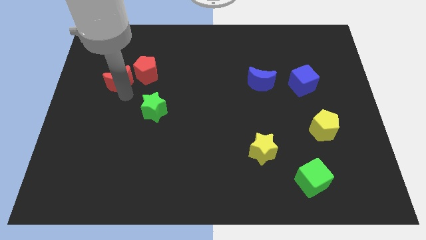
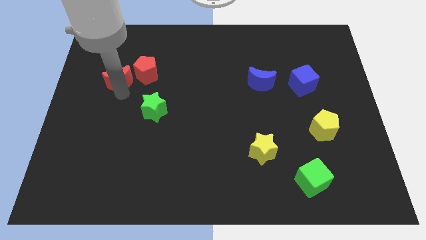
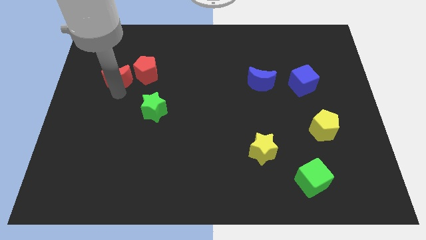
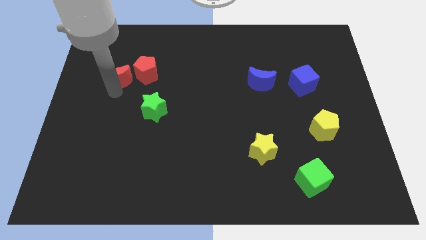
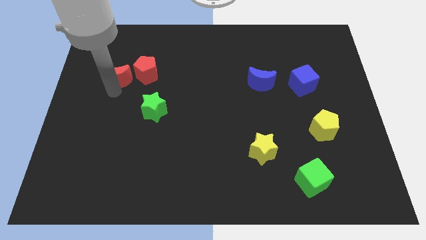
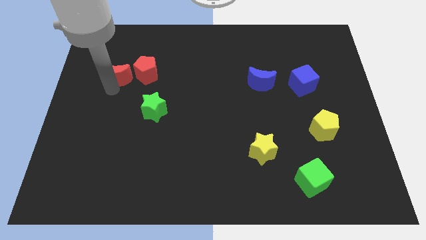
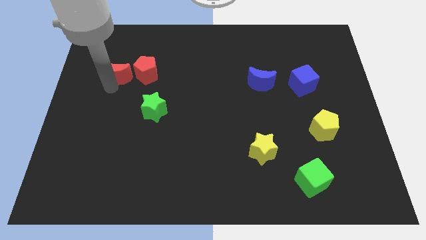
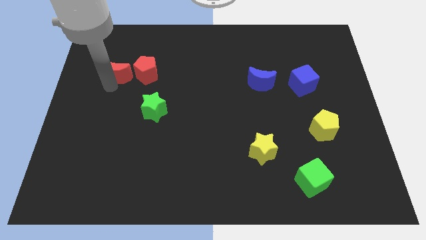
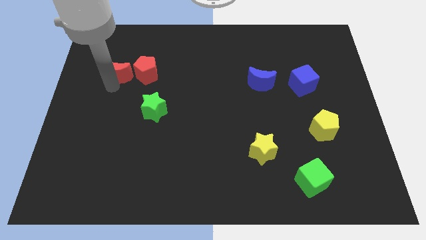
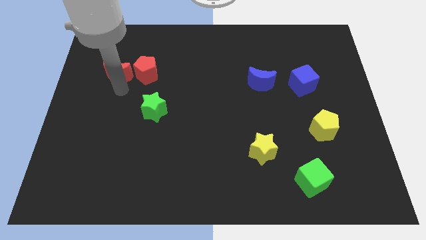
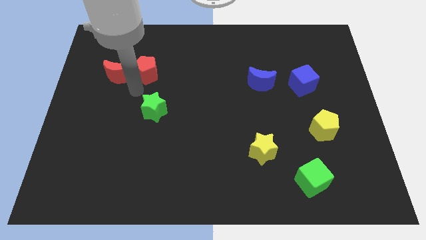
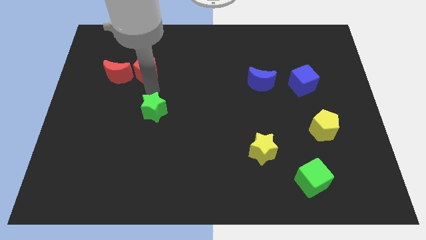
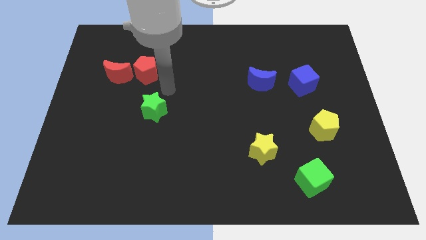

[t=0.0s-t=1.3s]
move the red moon slightly to the top

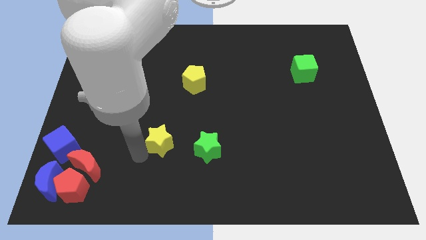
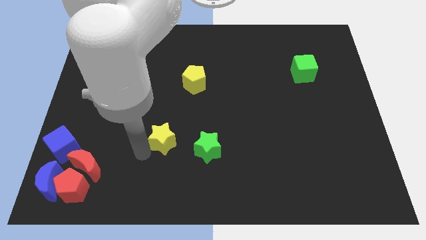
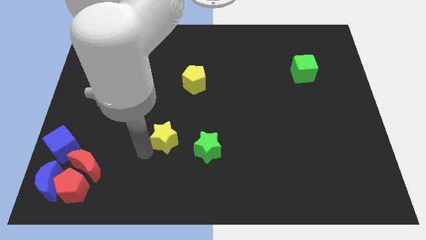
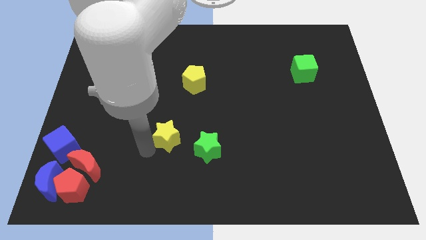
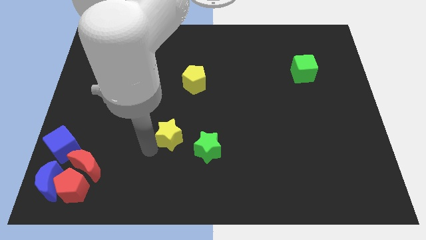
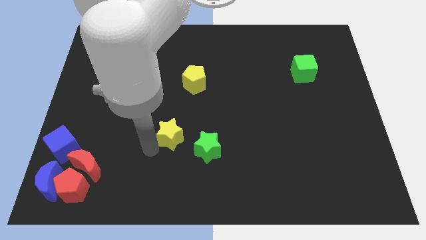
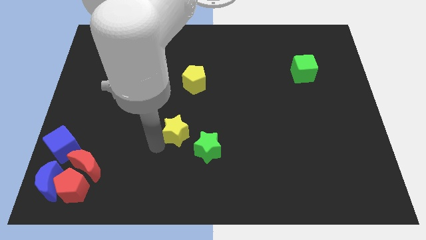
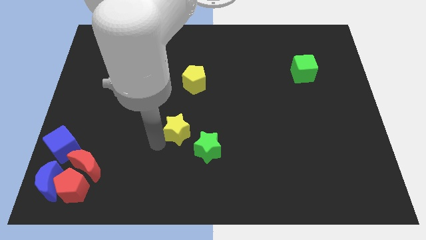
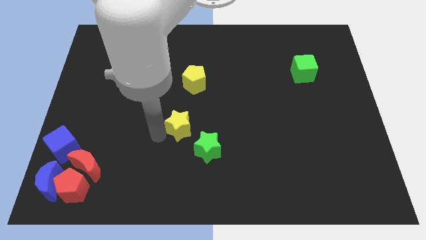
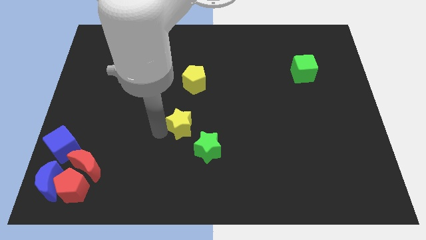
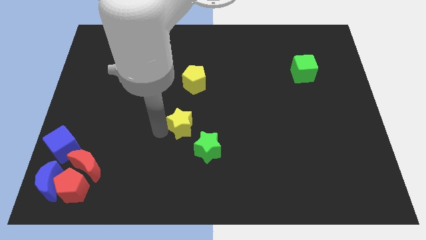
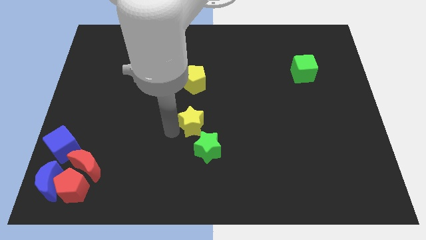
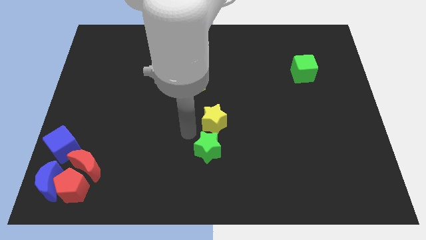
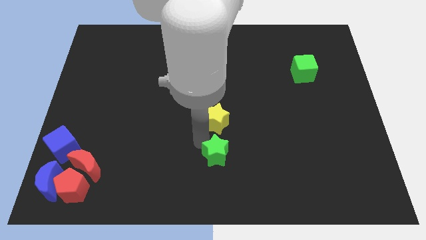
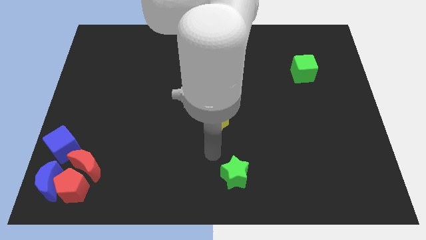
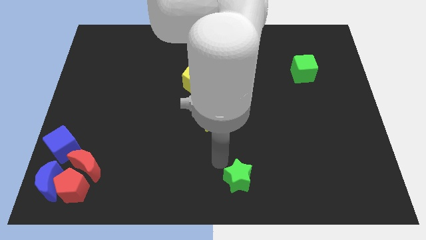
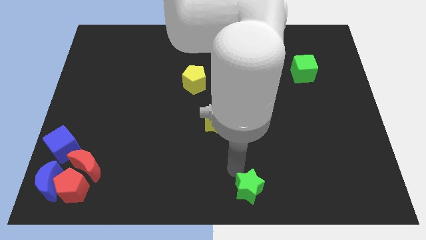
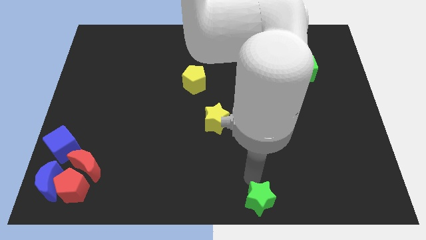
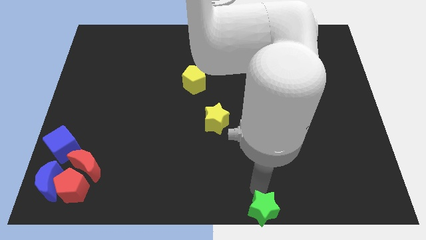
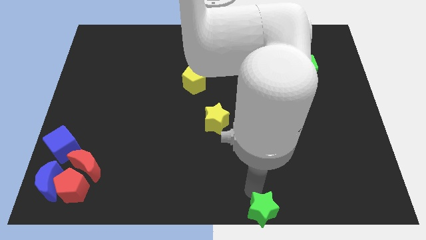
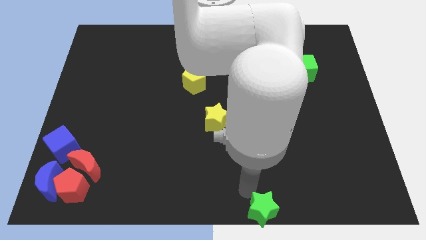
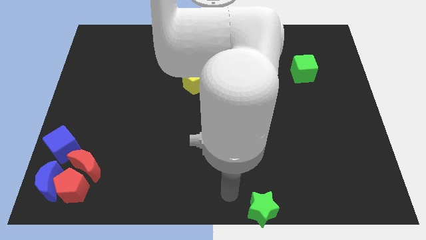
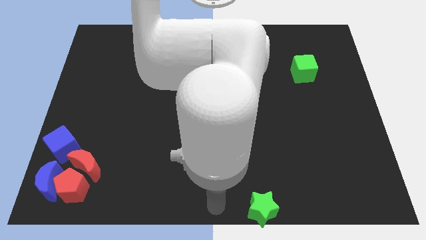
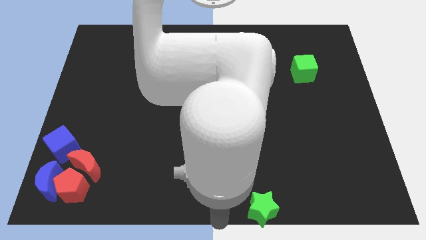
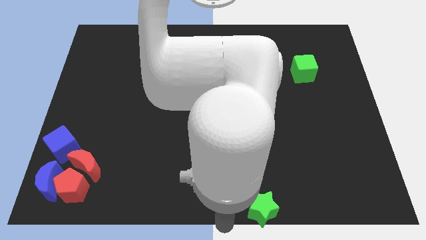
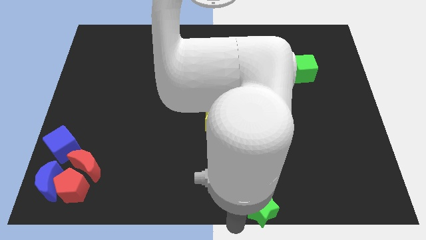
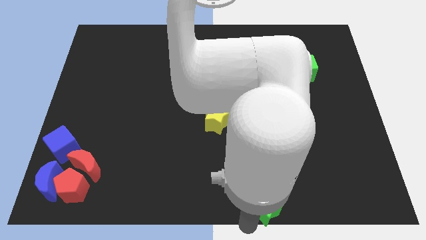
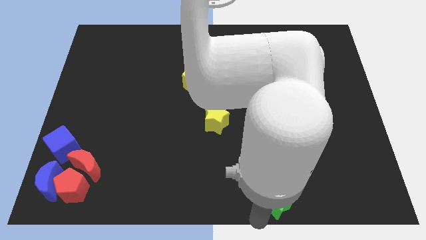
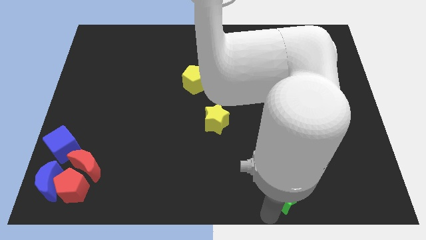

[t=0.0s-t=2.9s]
separate green star from yellow star

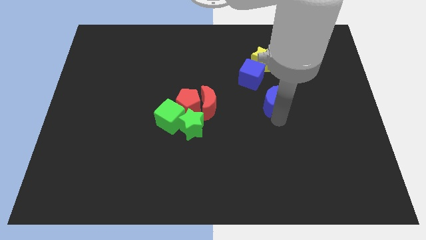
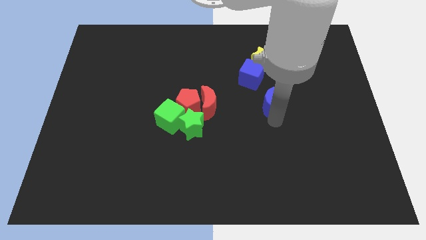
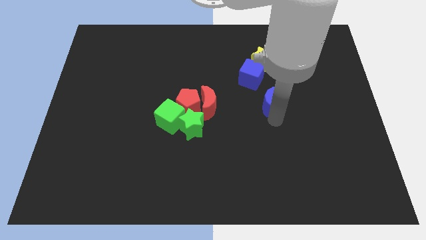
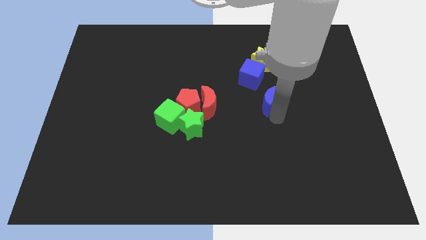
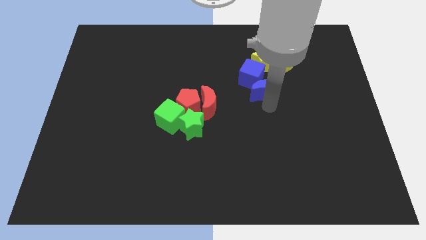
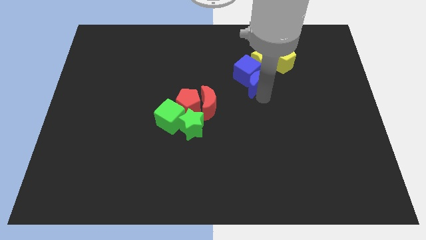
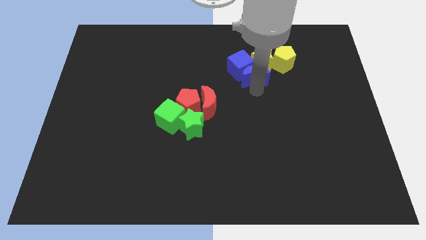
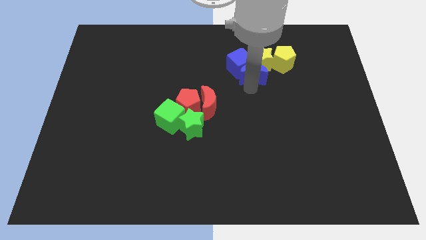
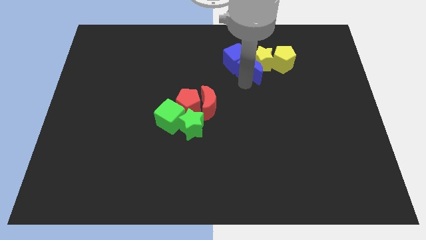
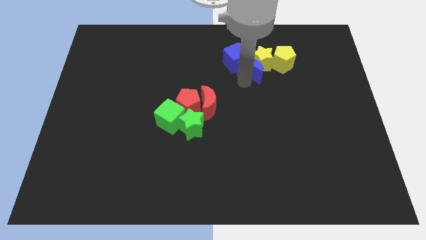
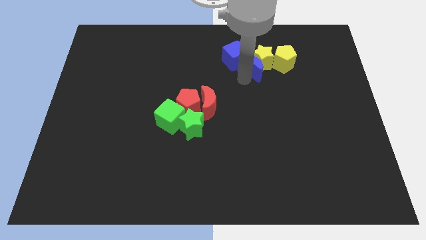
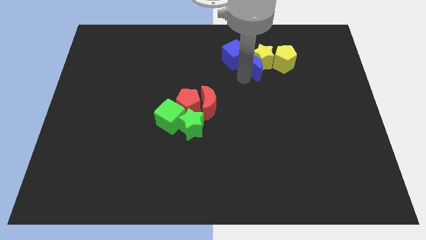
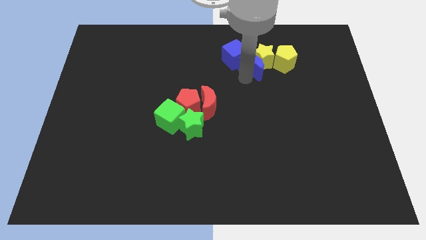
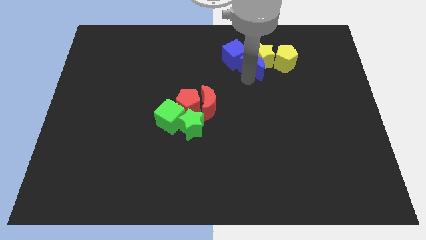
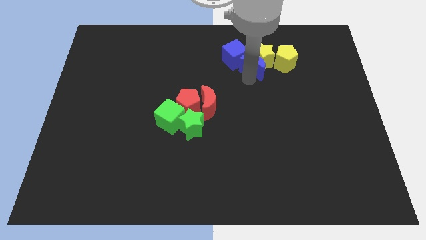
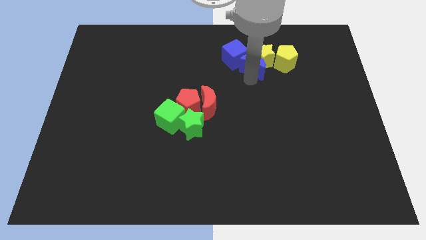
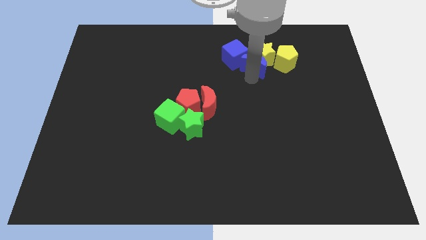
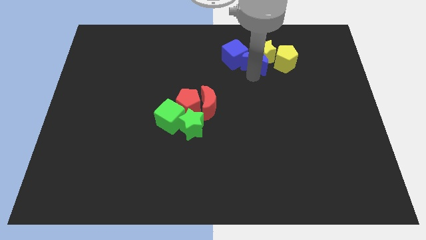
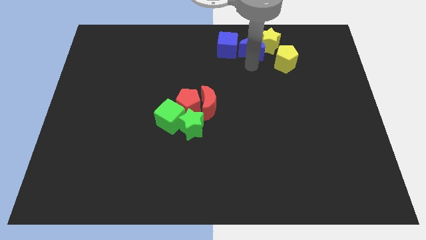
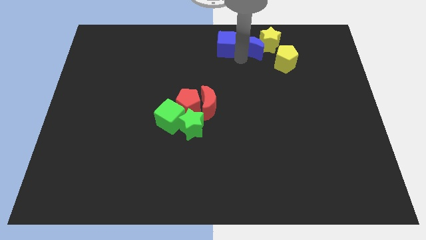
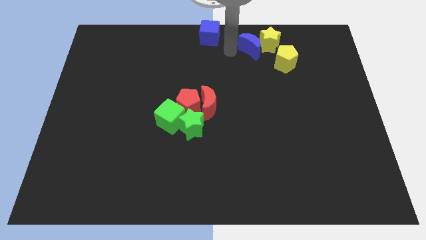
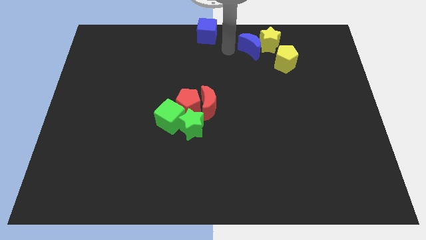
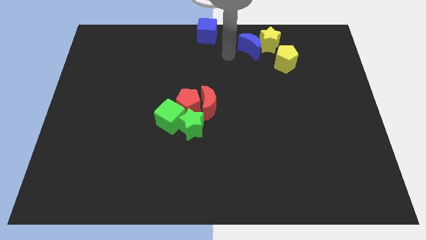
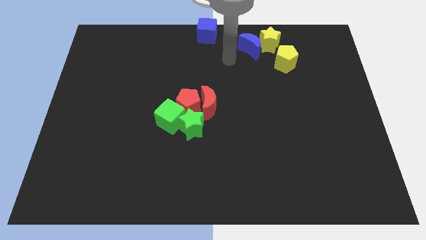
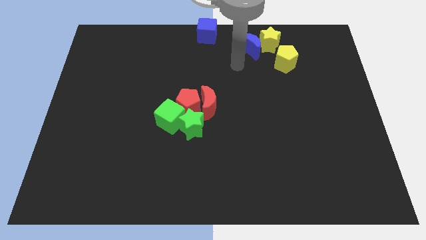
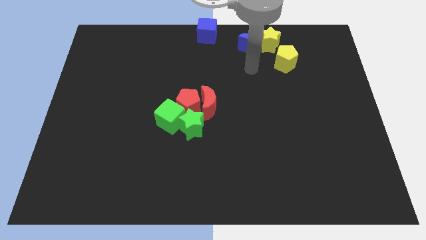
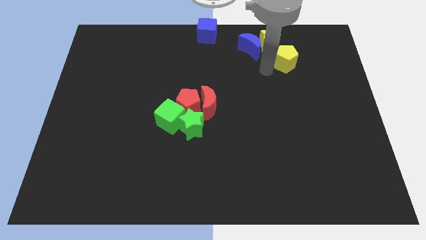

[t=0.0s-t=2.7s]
place the blue moon at the left side of the yellow star

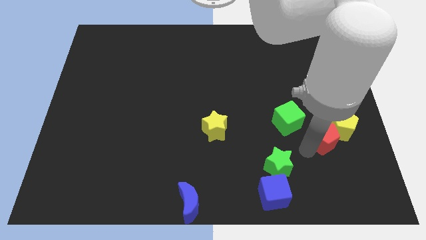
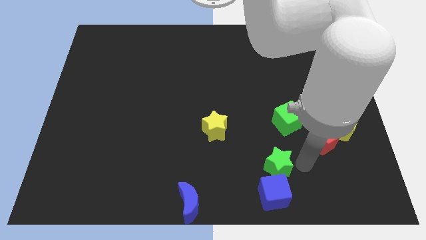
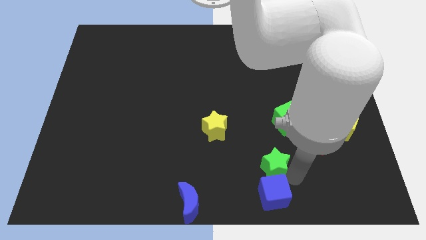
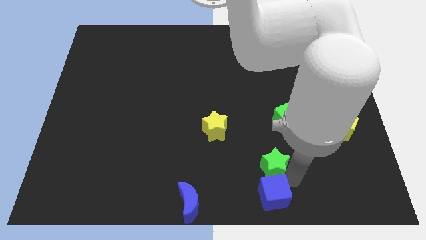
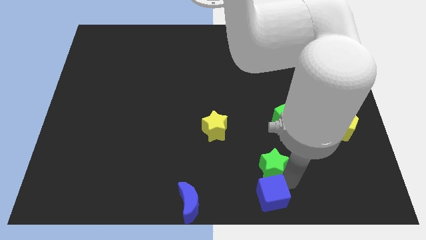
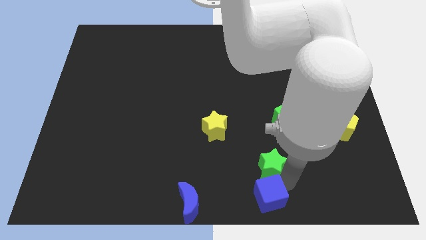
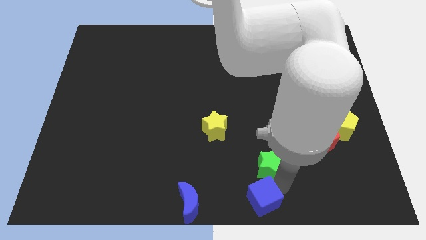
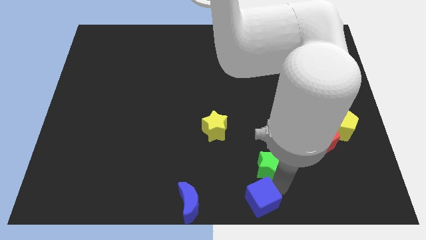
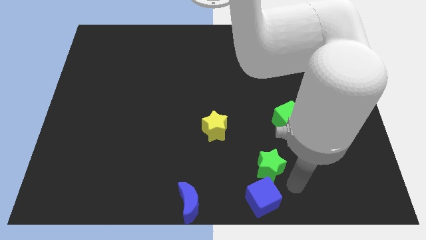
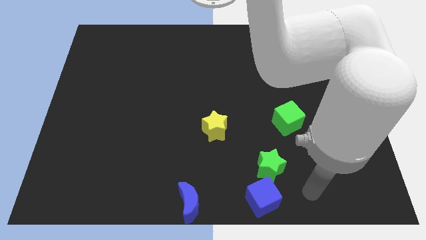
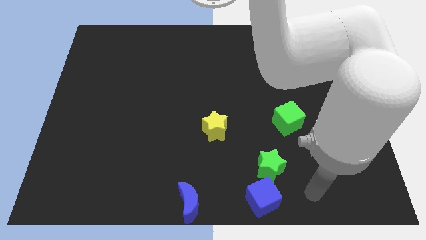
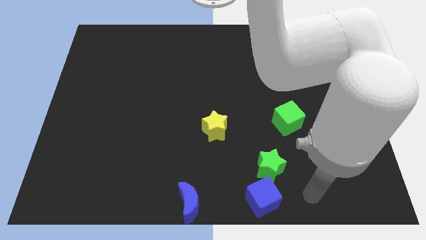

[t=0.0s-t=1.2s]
push the blue cube slightly to the left

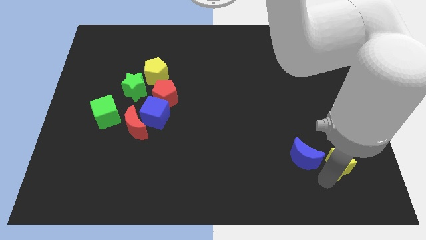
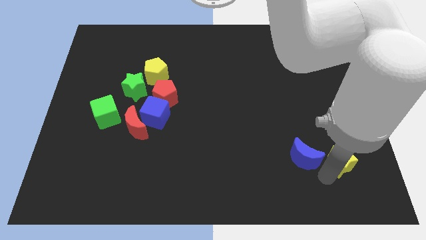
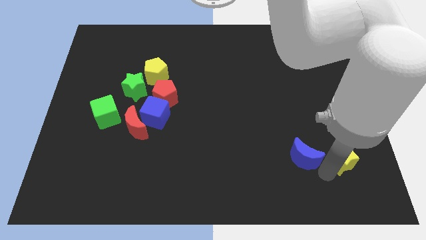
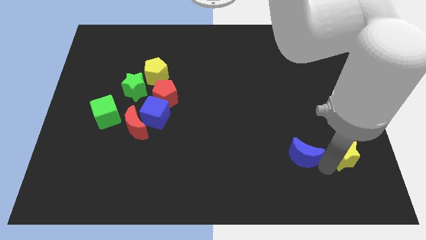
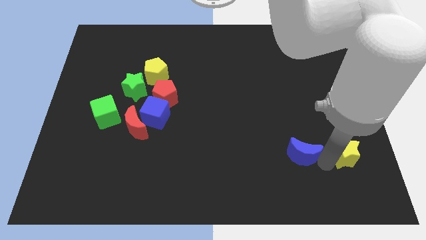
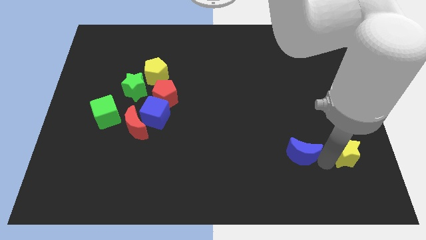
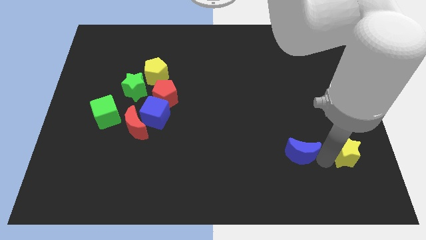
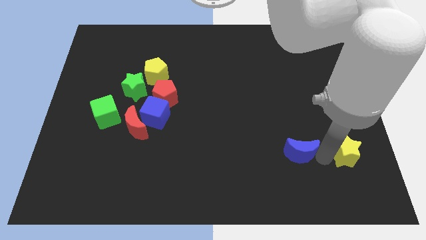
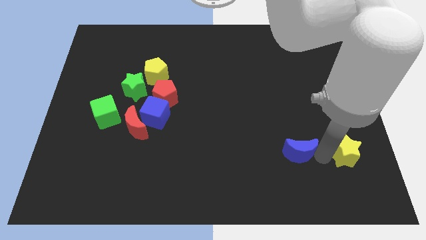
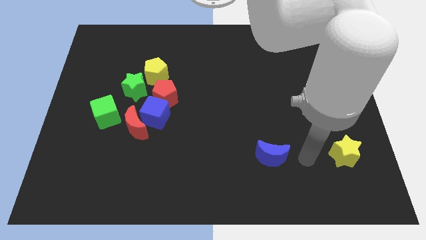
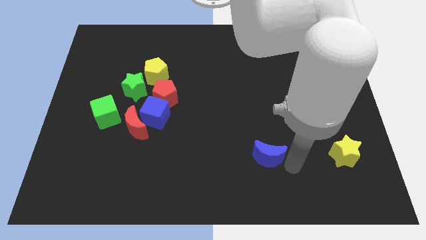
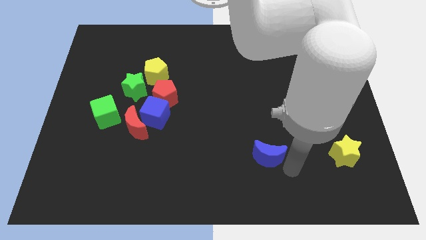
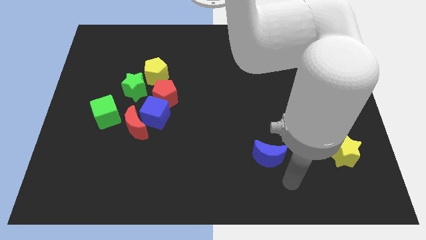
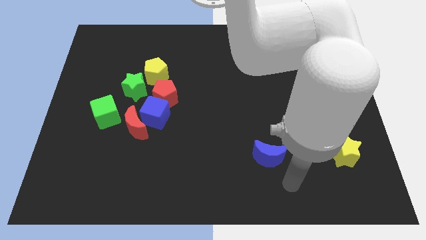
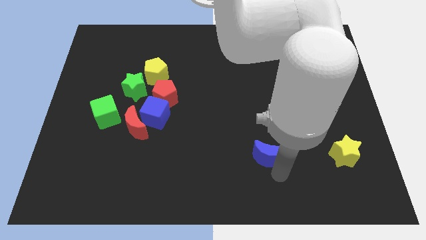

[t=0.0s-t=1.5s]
separate the blue crescent from the yellow star
